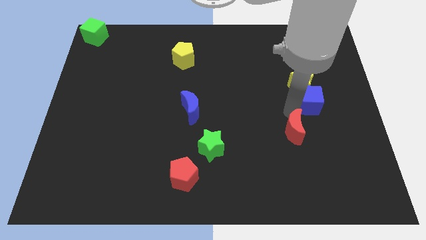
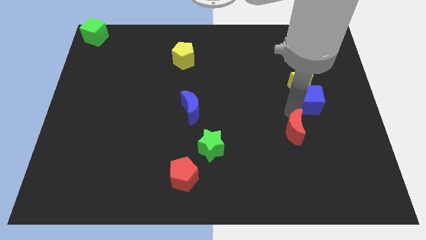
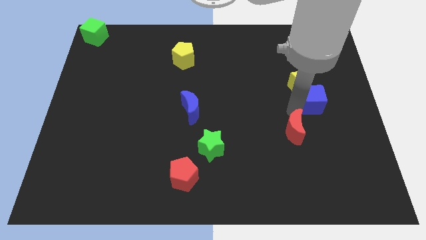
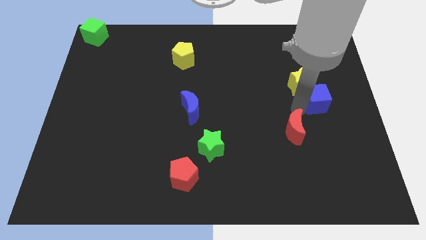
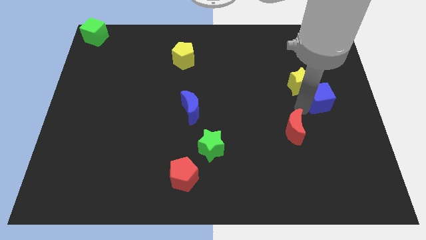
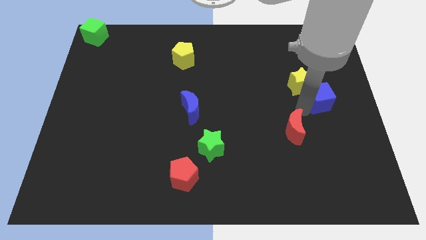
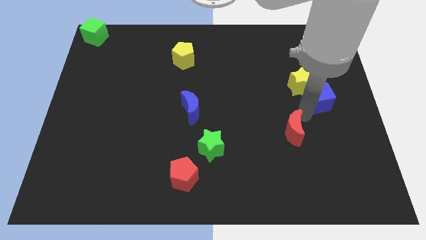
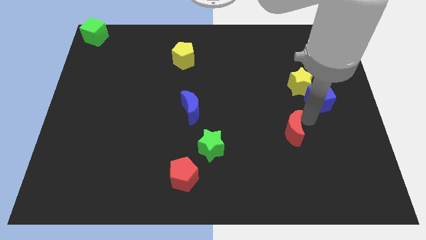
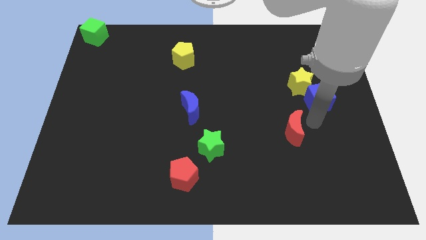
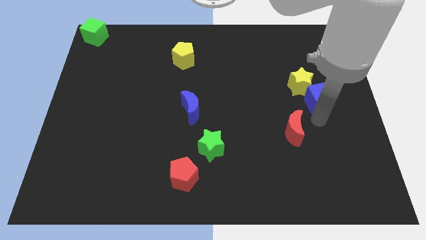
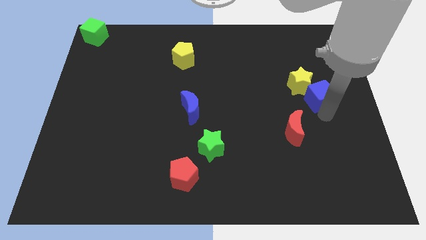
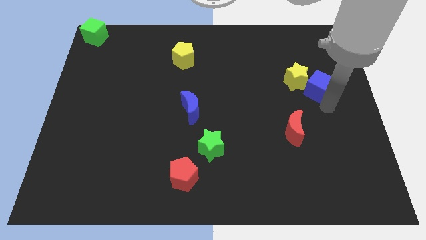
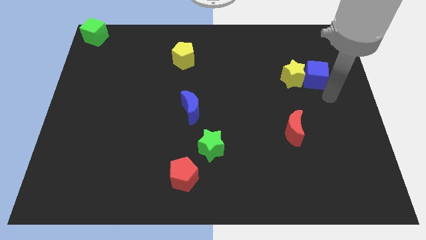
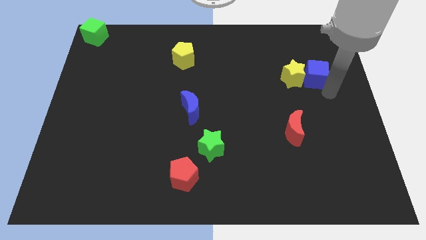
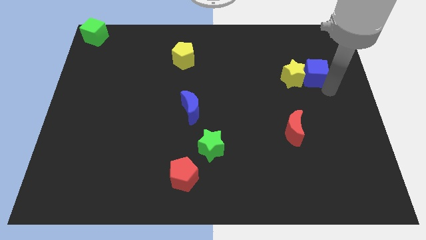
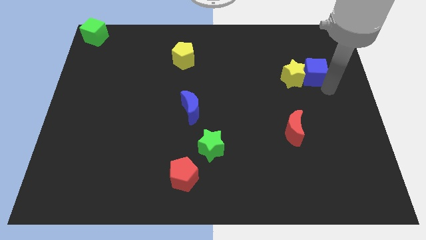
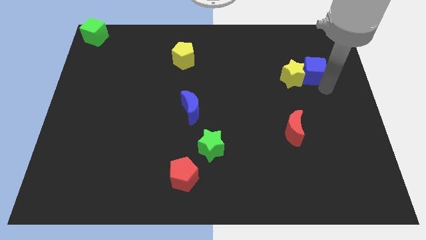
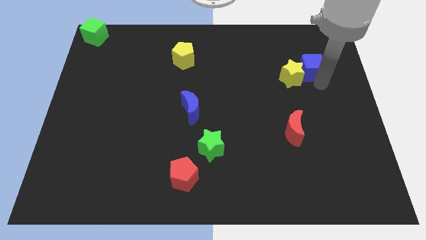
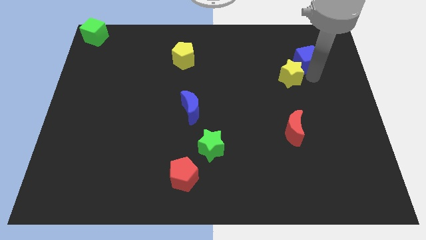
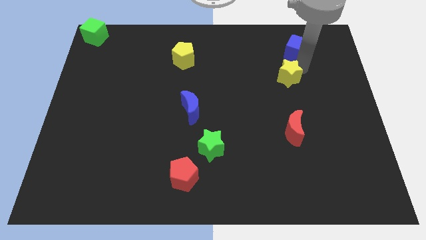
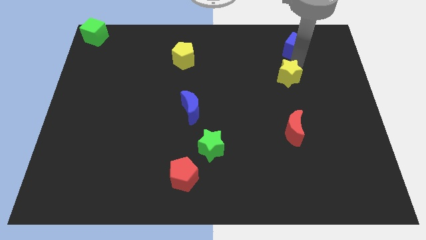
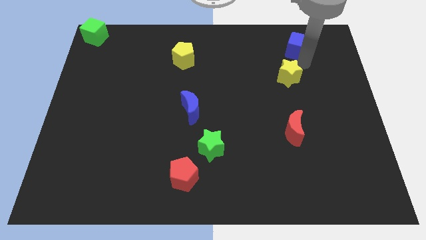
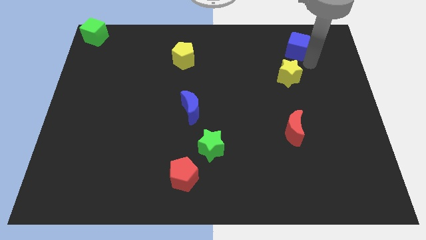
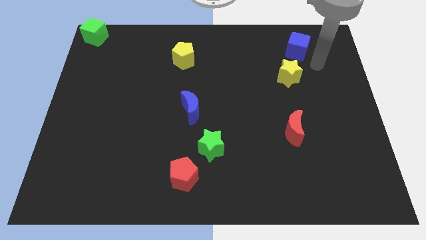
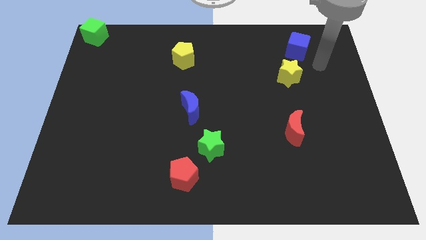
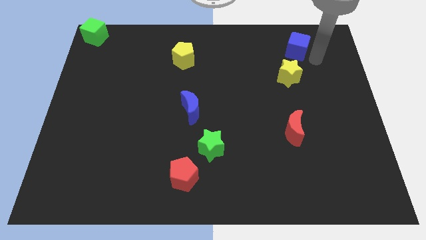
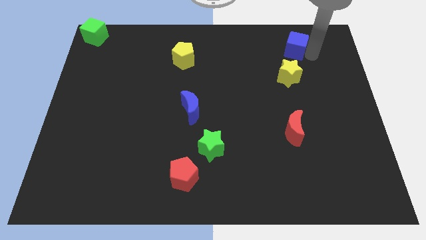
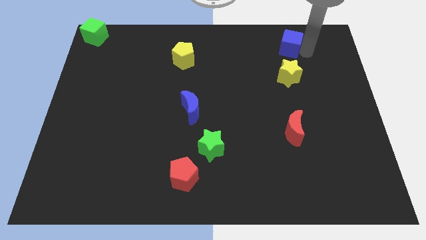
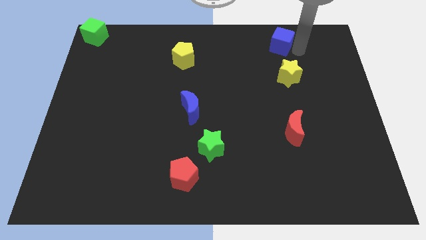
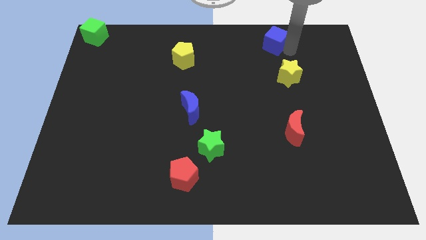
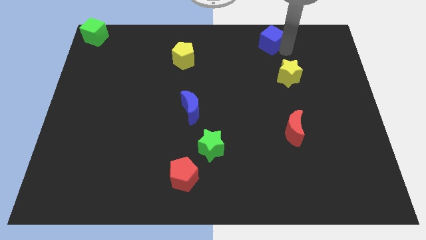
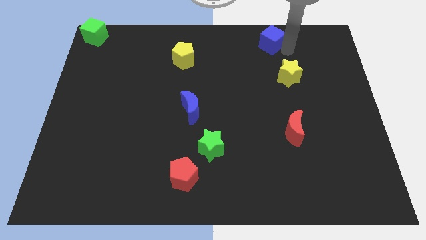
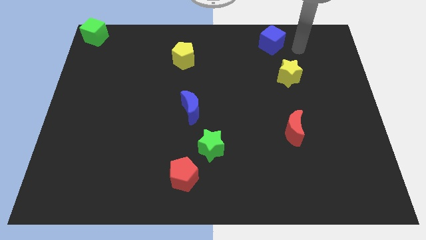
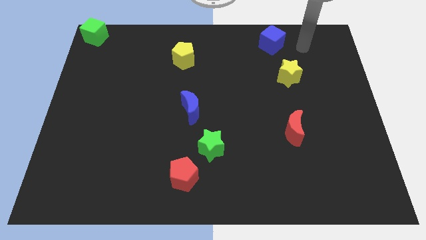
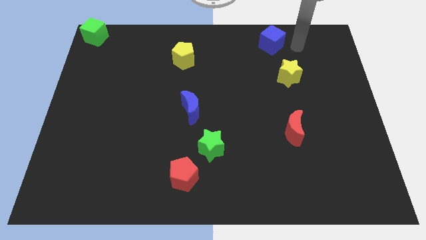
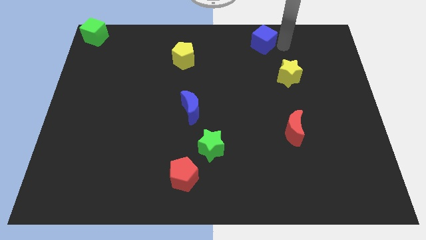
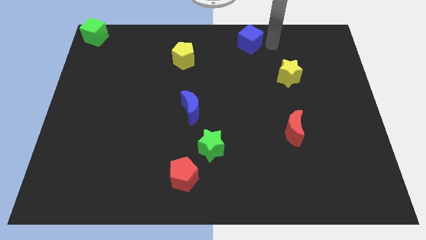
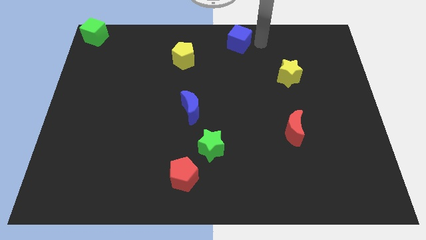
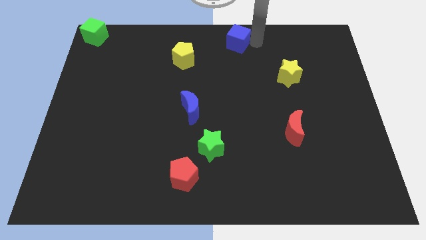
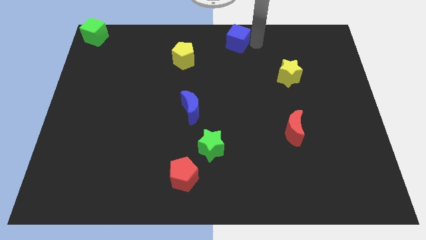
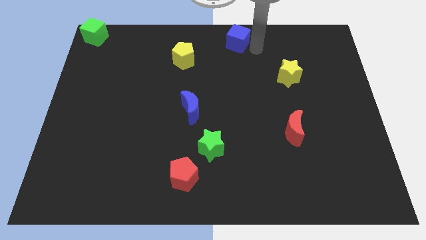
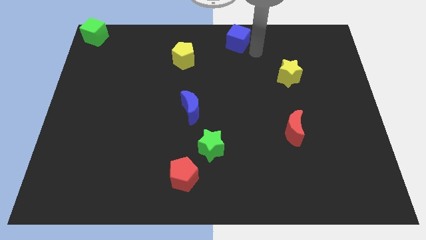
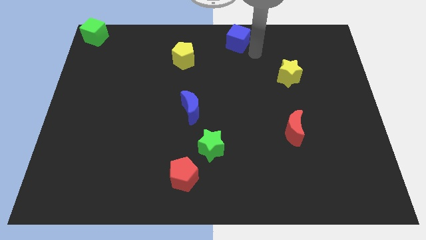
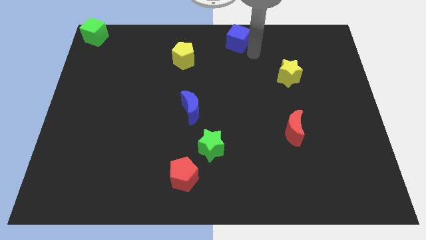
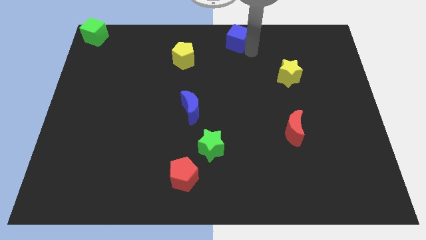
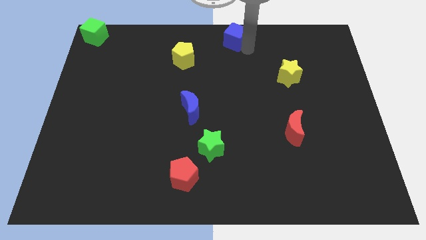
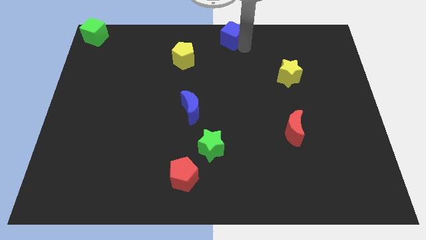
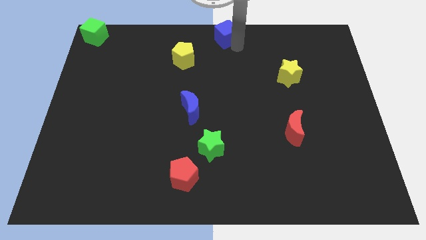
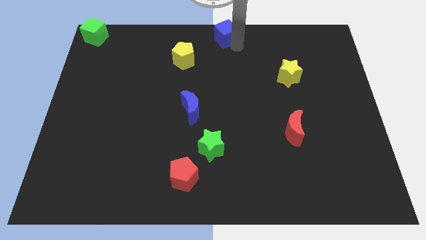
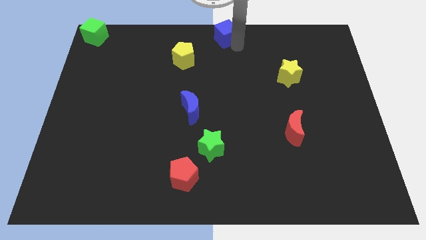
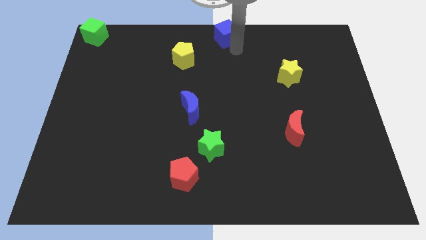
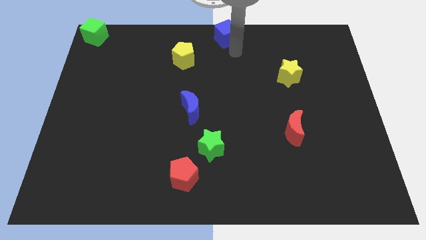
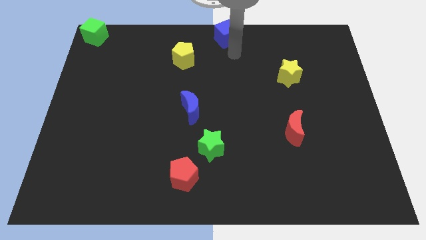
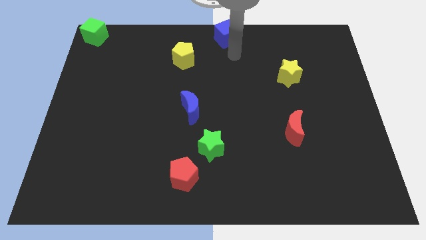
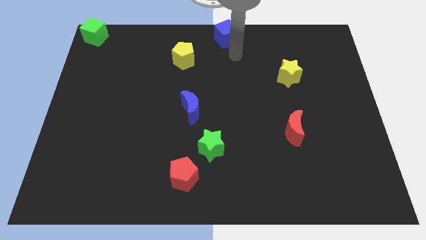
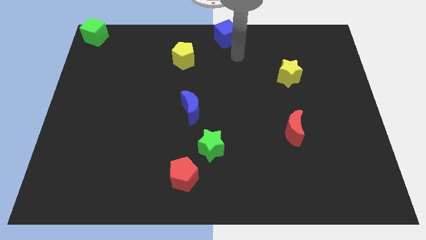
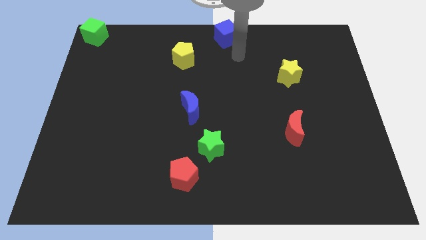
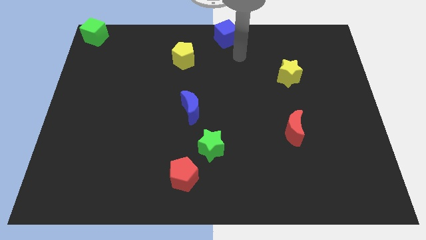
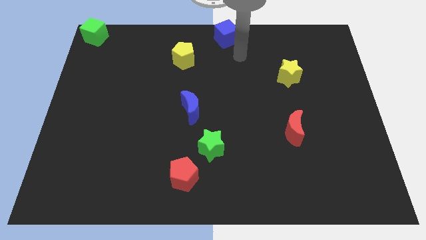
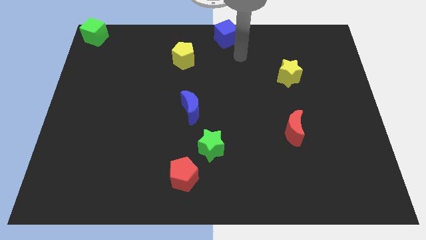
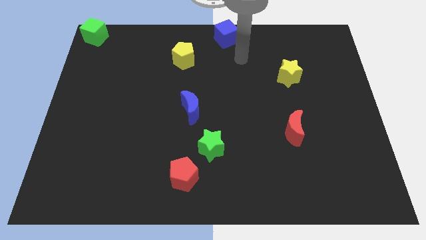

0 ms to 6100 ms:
push the blue cube towards the top center of the board

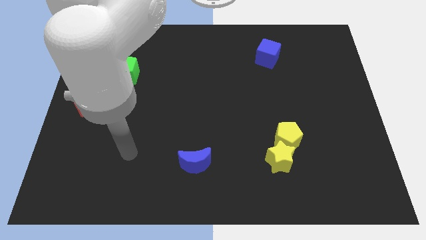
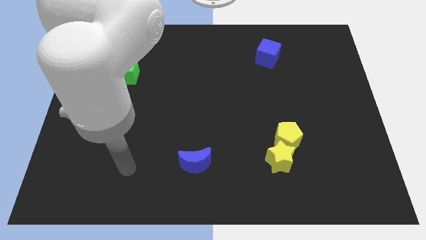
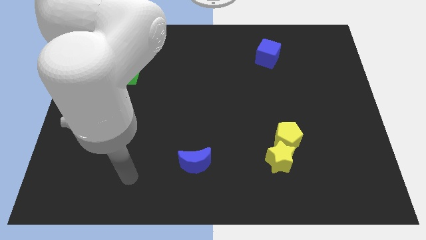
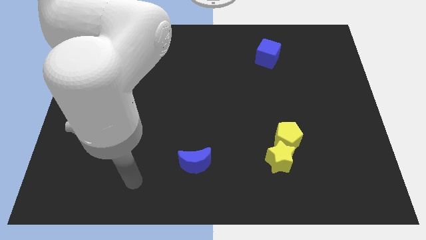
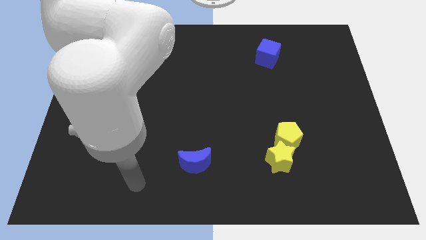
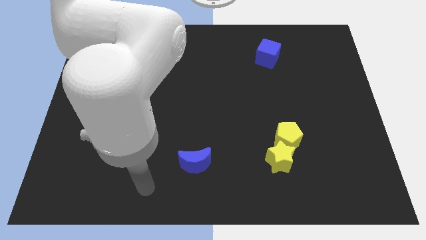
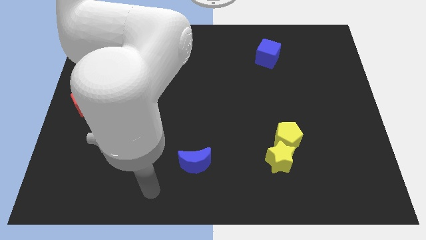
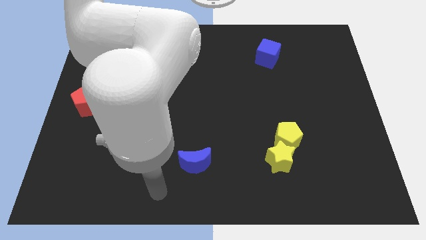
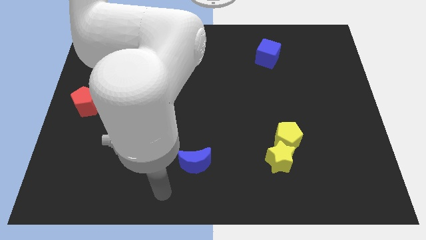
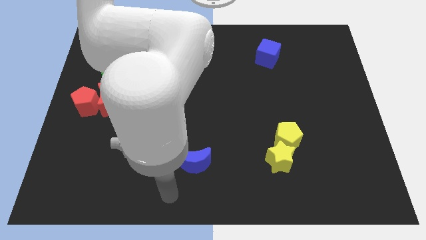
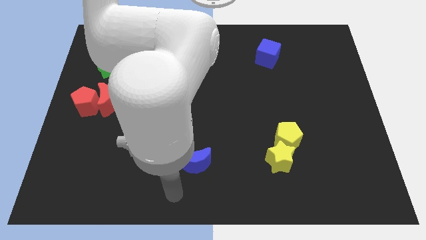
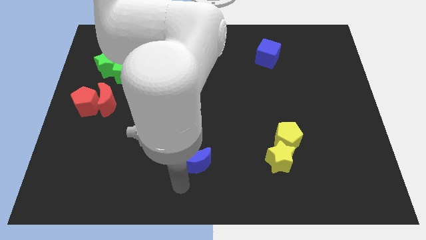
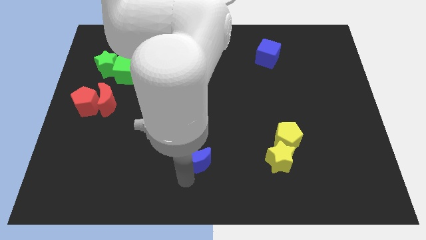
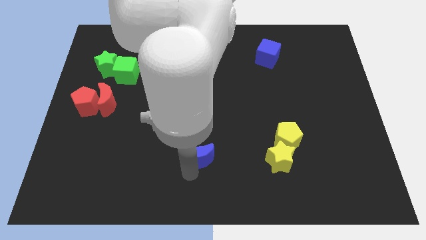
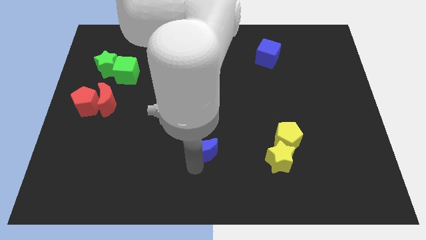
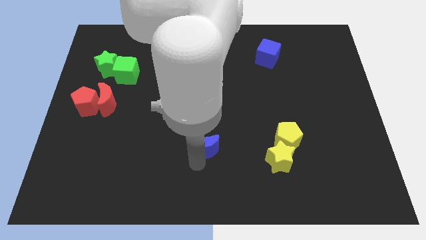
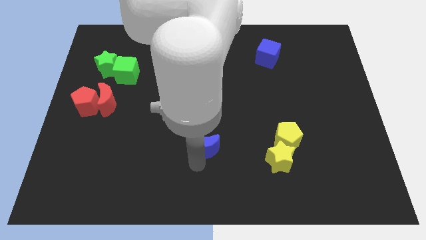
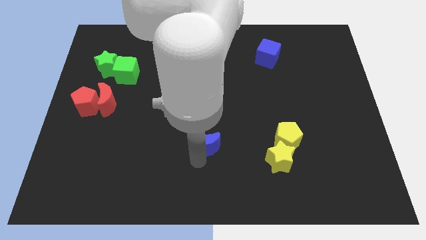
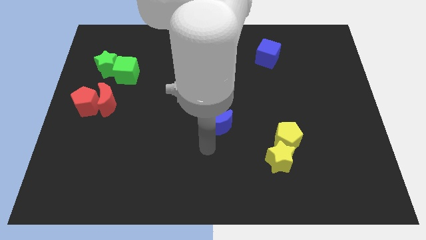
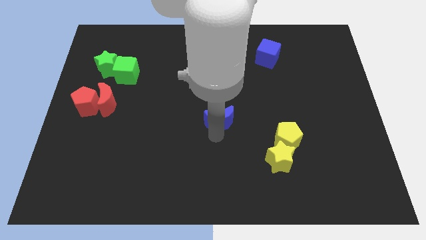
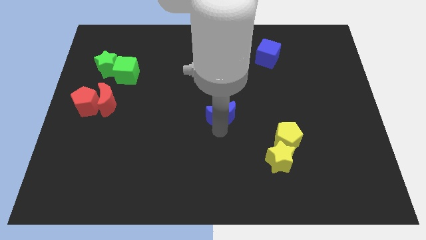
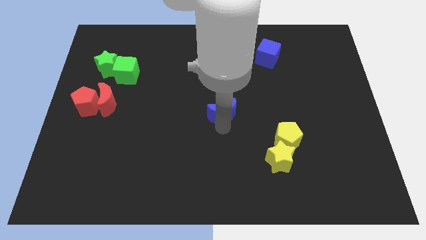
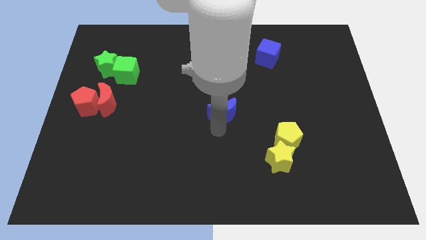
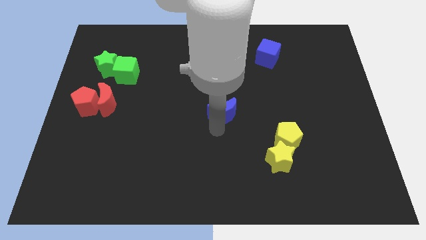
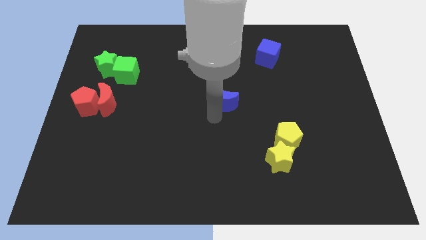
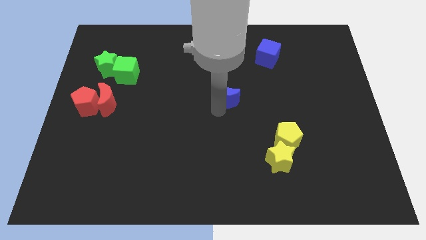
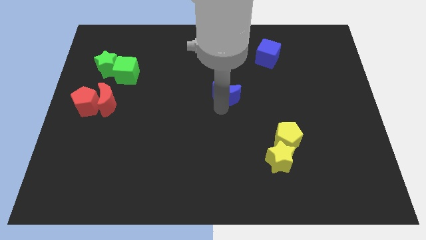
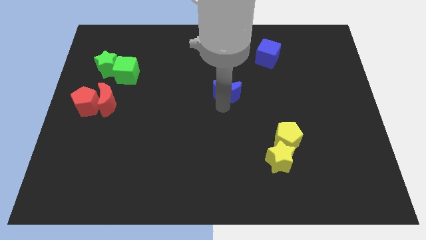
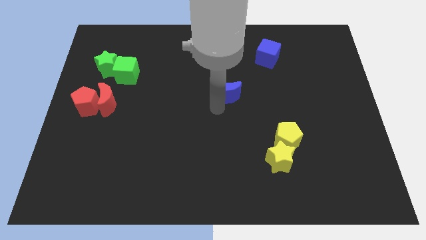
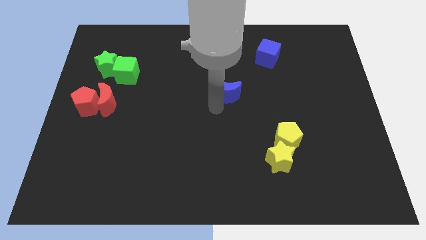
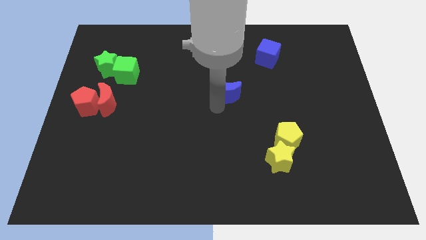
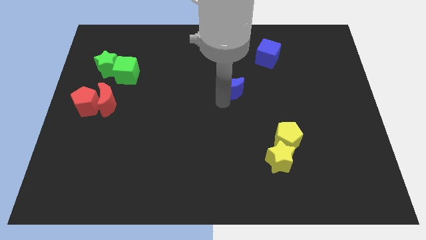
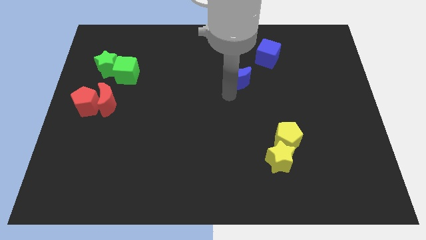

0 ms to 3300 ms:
place the blue moon diagonally bottom right to blue cube
